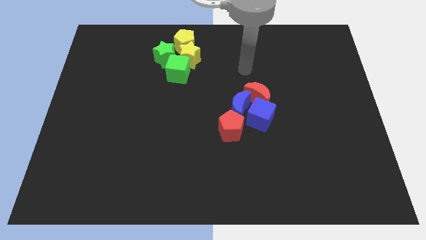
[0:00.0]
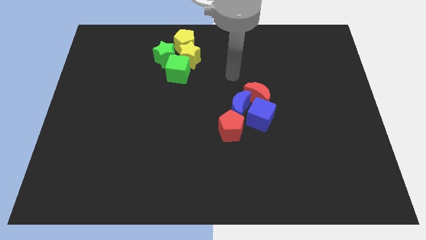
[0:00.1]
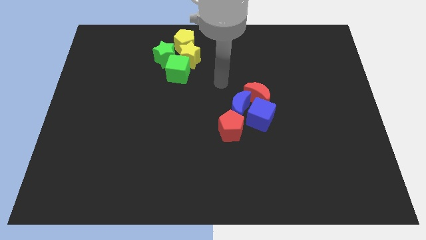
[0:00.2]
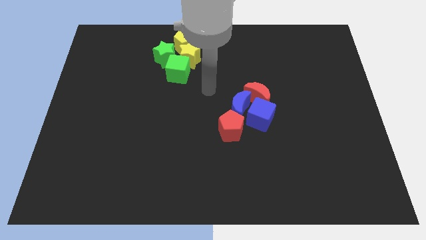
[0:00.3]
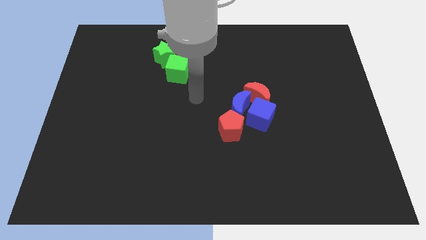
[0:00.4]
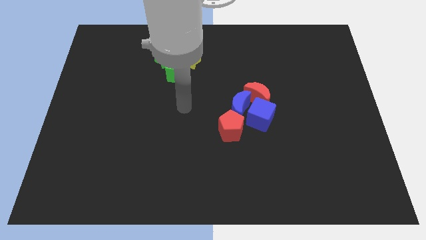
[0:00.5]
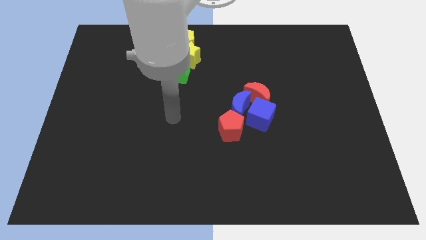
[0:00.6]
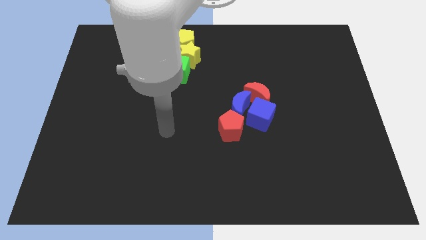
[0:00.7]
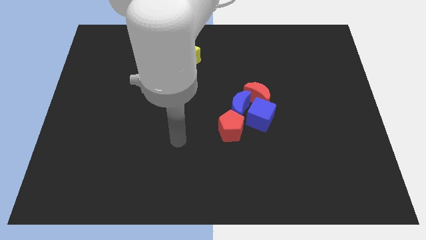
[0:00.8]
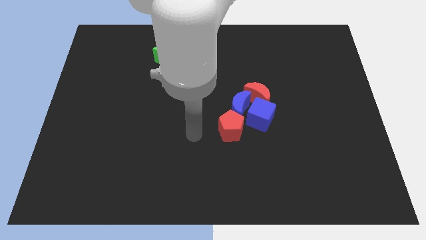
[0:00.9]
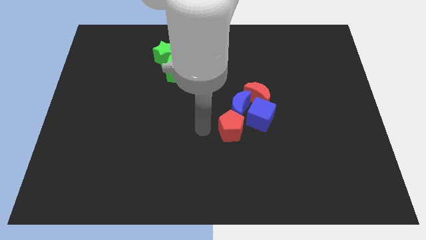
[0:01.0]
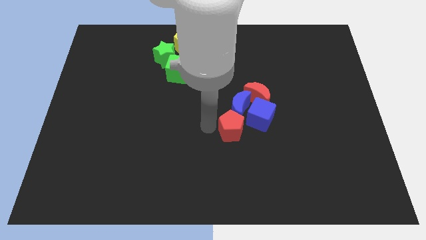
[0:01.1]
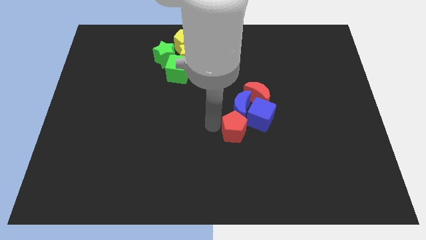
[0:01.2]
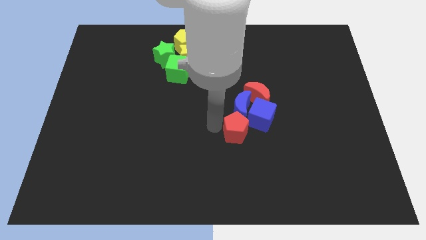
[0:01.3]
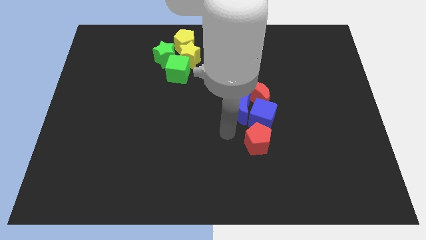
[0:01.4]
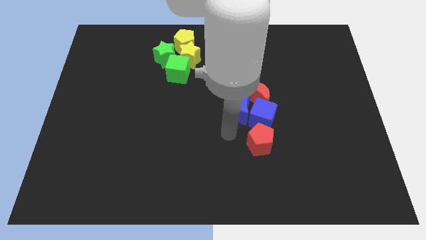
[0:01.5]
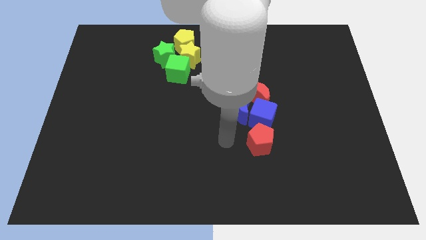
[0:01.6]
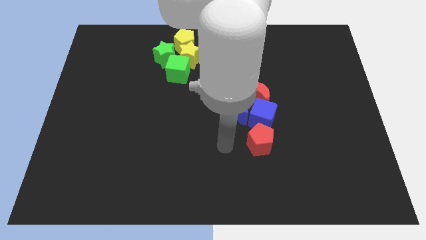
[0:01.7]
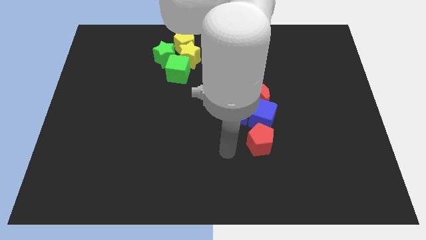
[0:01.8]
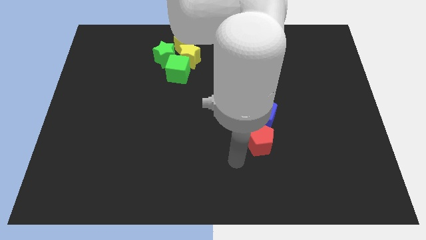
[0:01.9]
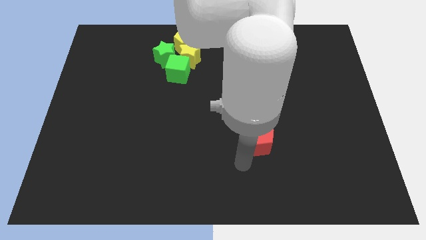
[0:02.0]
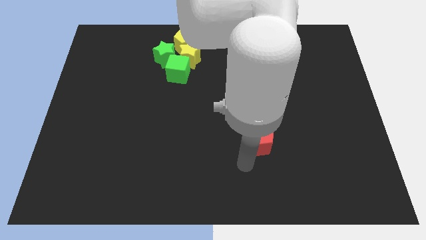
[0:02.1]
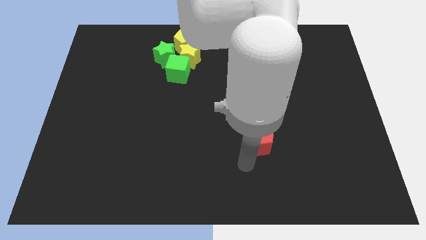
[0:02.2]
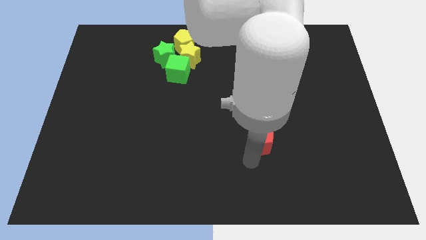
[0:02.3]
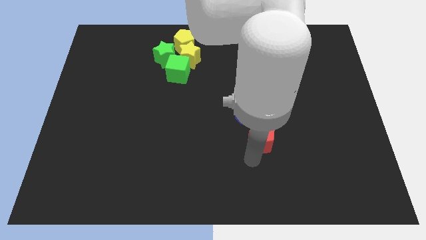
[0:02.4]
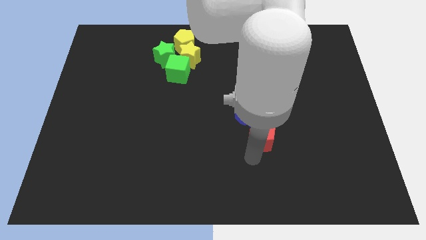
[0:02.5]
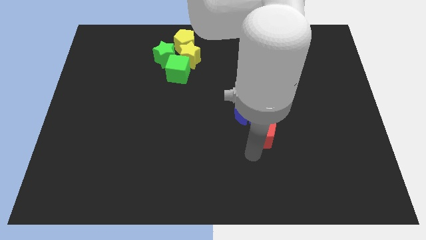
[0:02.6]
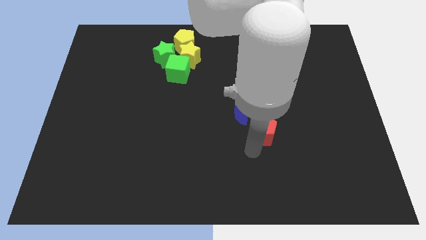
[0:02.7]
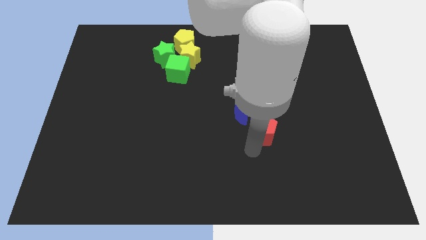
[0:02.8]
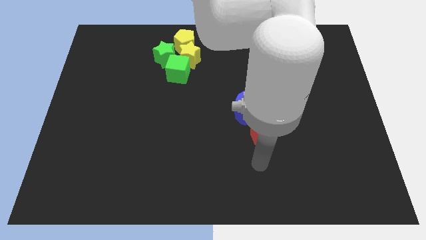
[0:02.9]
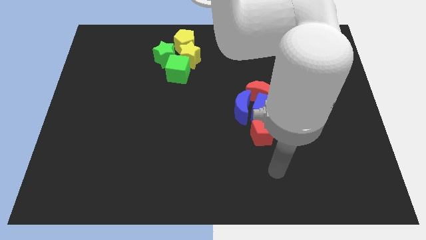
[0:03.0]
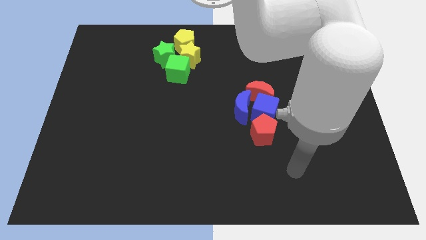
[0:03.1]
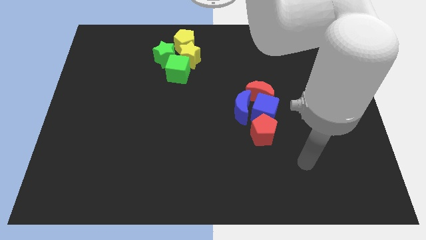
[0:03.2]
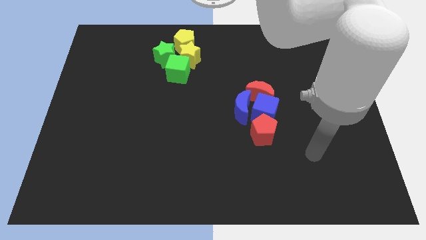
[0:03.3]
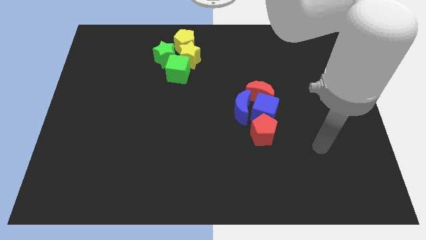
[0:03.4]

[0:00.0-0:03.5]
place the red pentagon below the blue cube to form a vertical line

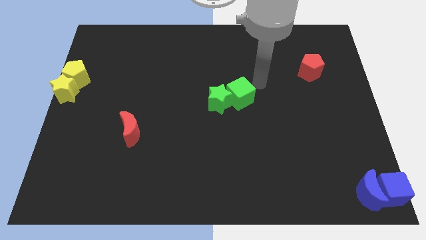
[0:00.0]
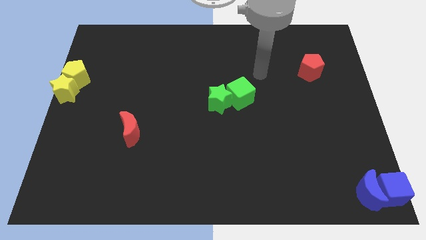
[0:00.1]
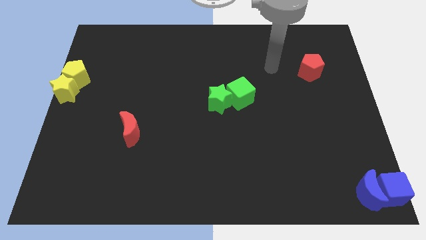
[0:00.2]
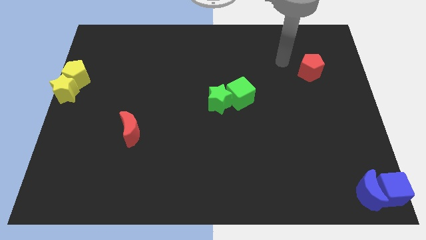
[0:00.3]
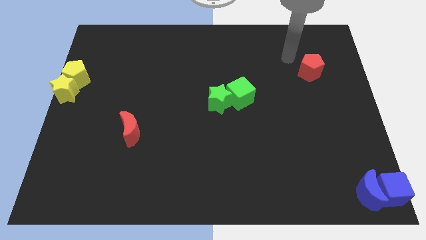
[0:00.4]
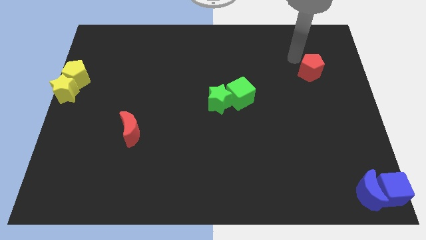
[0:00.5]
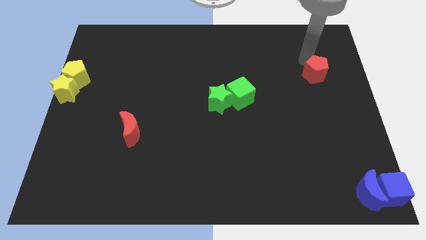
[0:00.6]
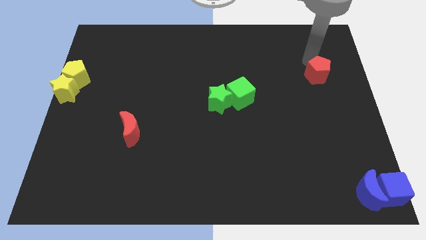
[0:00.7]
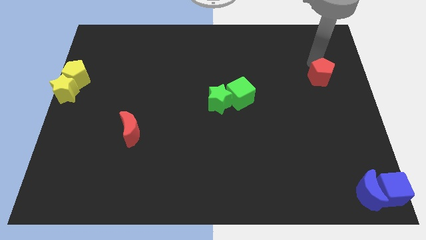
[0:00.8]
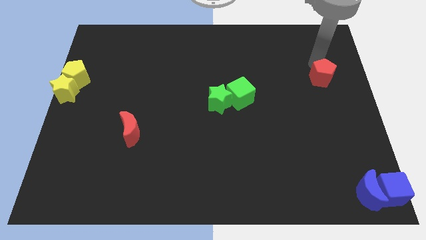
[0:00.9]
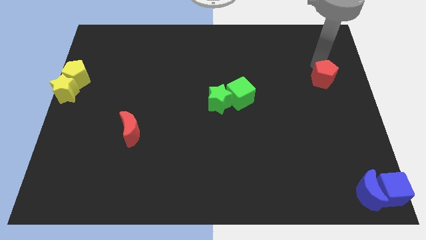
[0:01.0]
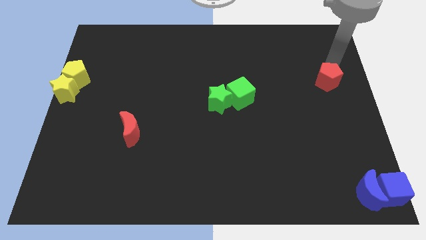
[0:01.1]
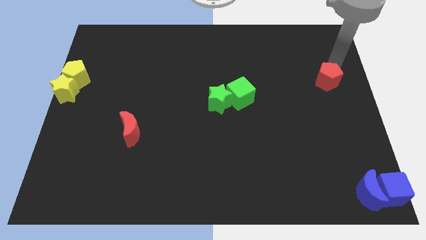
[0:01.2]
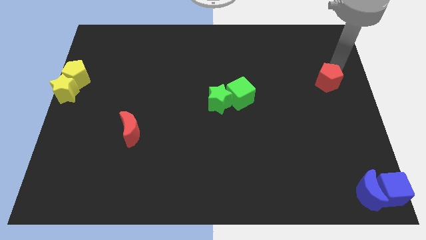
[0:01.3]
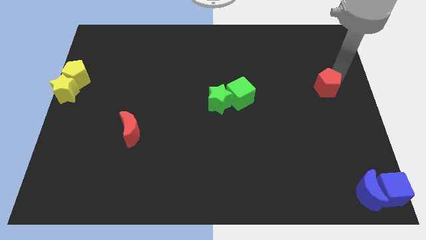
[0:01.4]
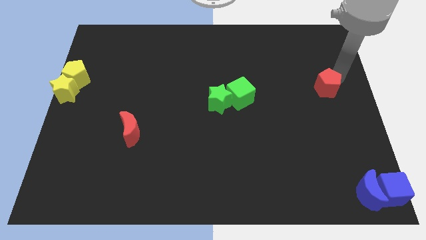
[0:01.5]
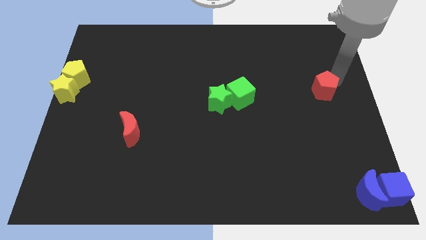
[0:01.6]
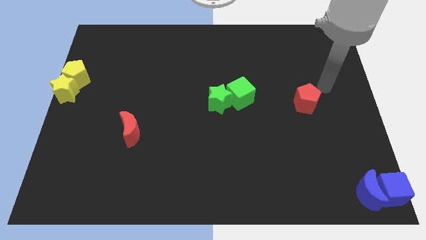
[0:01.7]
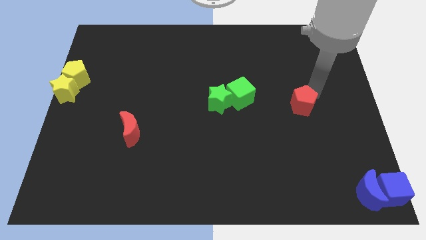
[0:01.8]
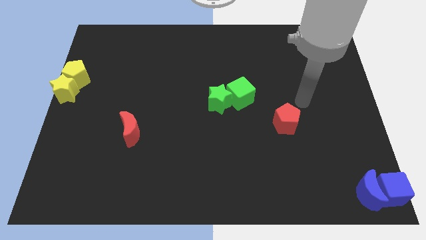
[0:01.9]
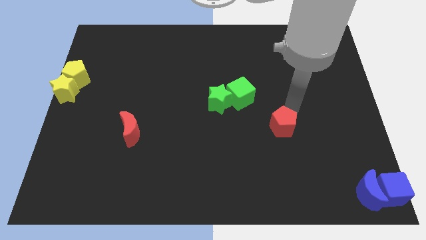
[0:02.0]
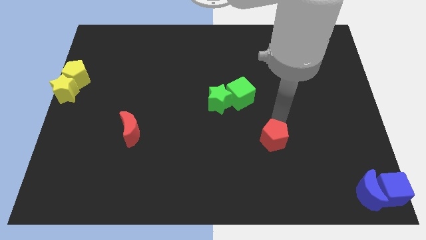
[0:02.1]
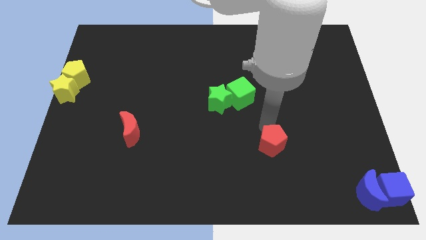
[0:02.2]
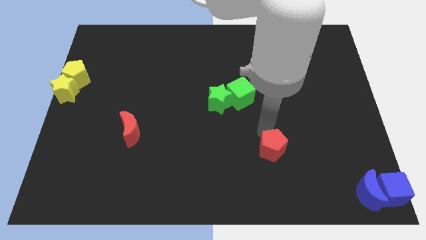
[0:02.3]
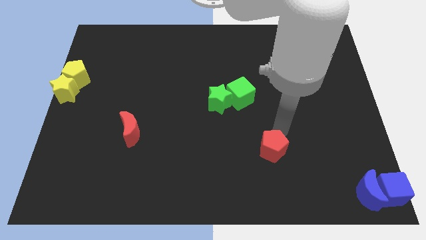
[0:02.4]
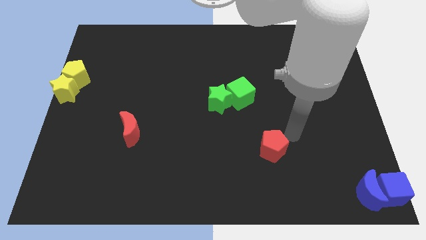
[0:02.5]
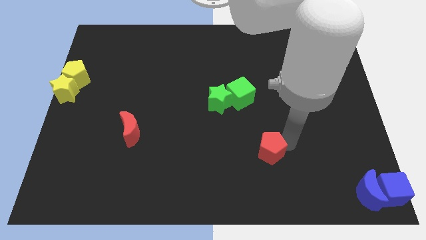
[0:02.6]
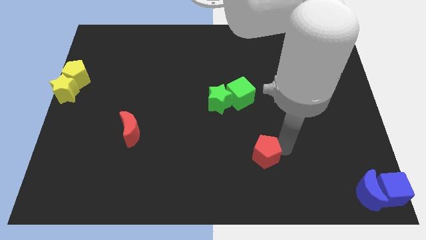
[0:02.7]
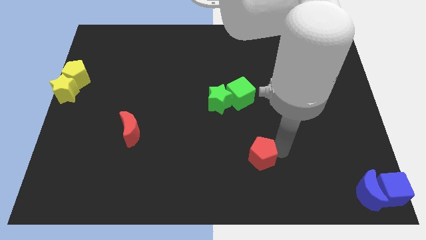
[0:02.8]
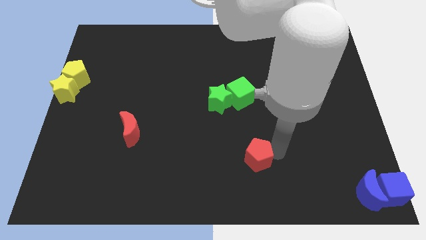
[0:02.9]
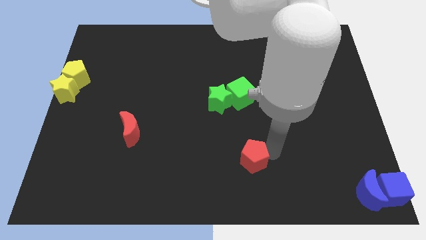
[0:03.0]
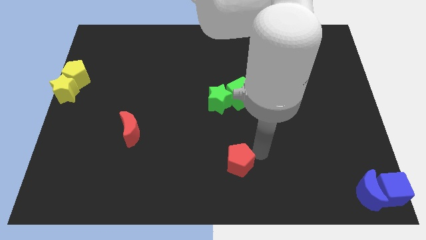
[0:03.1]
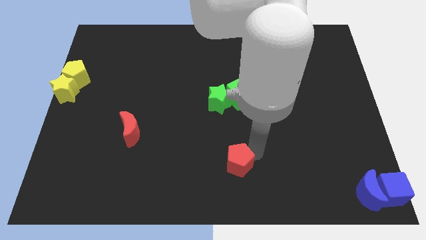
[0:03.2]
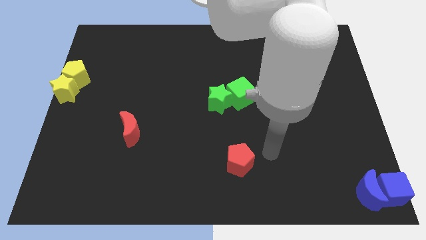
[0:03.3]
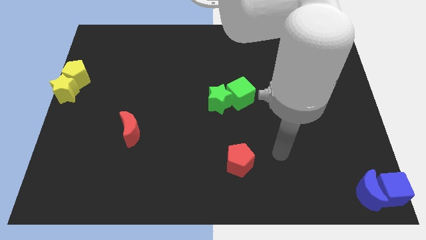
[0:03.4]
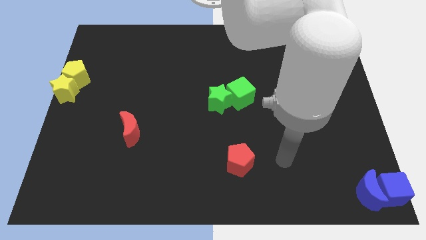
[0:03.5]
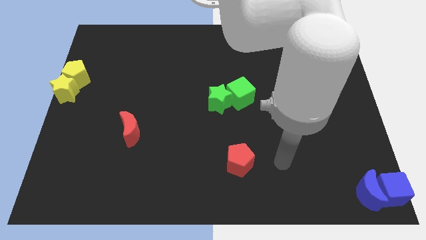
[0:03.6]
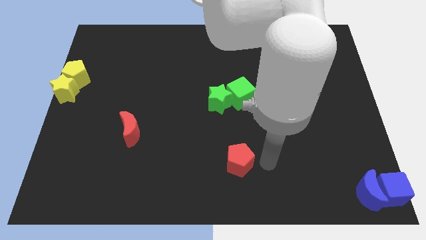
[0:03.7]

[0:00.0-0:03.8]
move the red pentagon to the bottom side of the green blocks

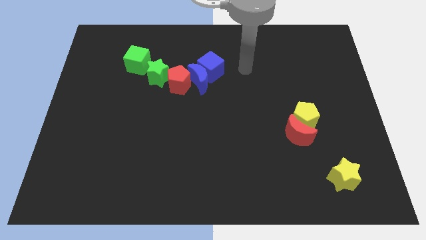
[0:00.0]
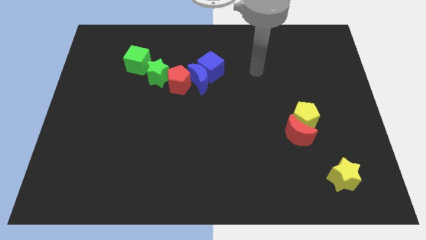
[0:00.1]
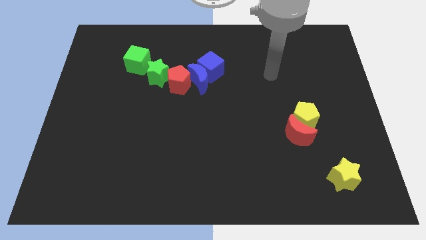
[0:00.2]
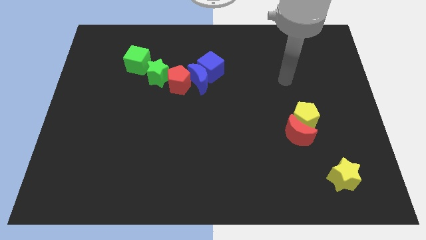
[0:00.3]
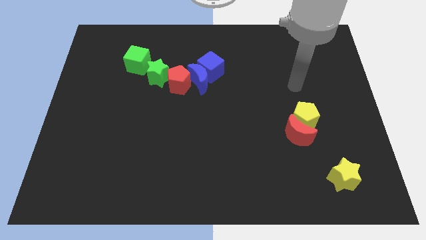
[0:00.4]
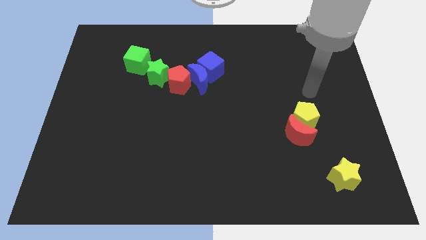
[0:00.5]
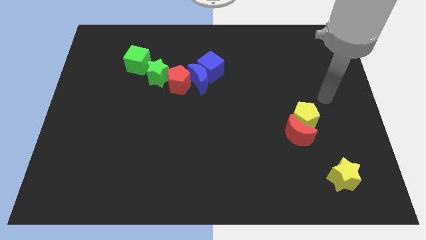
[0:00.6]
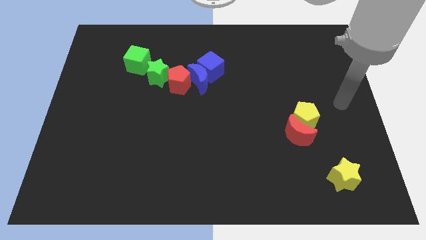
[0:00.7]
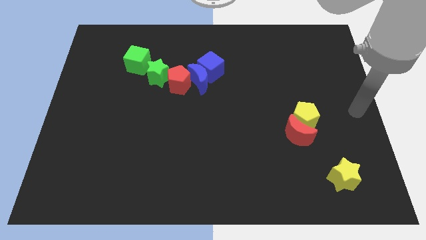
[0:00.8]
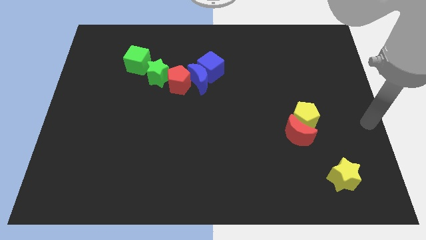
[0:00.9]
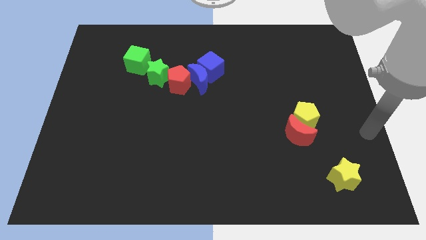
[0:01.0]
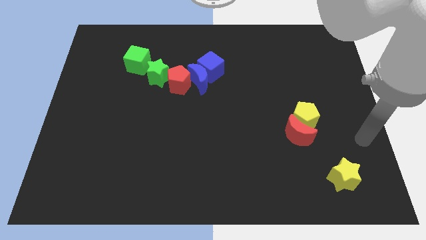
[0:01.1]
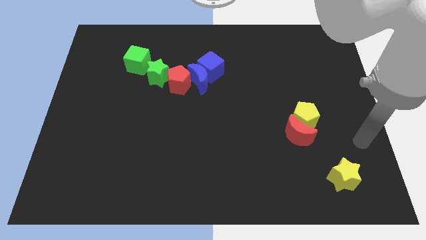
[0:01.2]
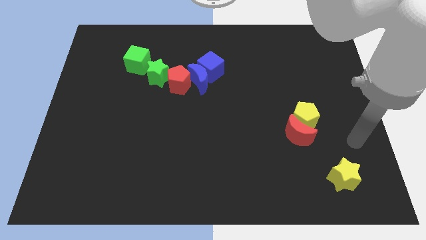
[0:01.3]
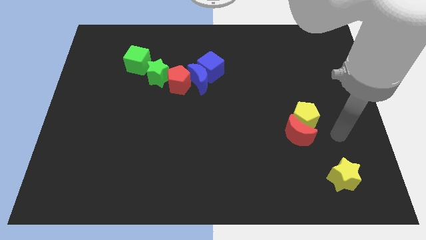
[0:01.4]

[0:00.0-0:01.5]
move your arm towards the yellow pentagon

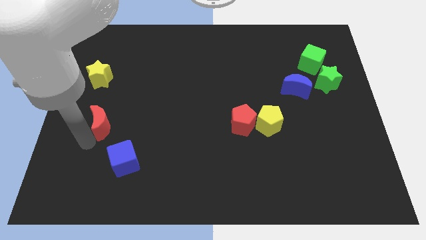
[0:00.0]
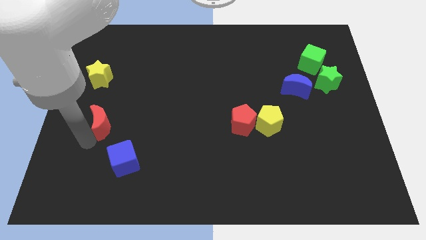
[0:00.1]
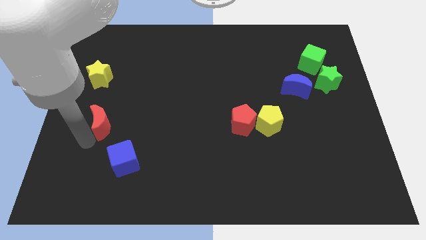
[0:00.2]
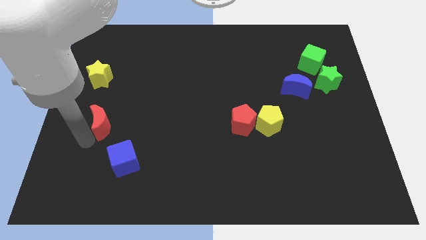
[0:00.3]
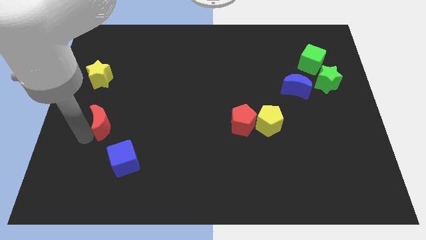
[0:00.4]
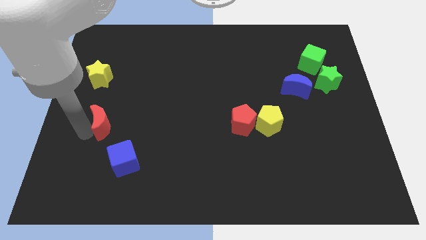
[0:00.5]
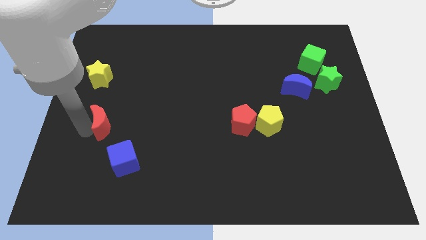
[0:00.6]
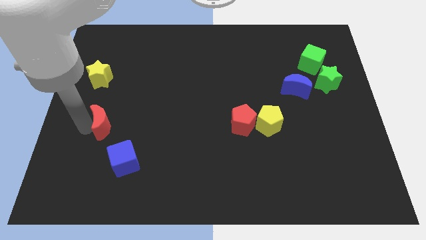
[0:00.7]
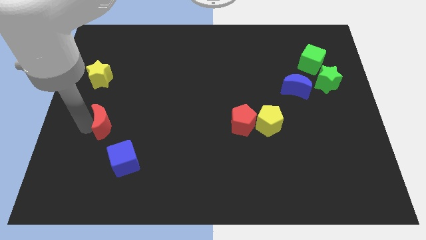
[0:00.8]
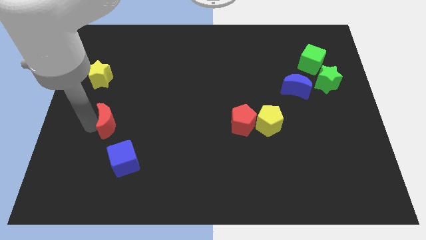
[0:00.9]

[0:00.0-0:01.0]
place red crescent in between yellow star and blue cube
